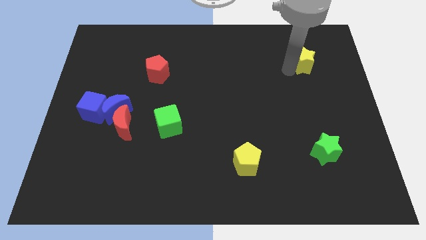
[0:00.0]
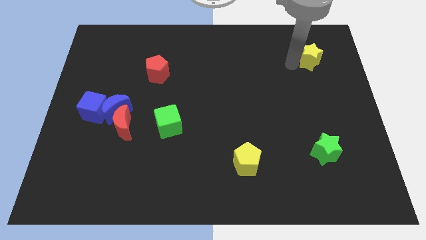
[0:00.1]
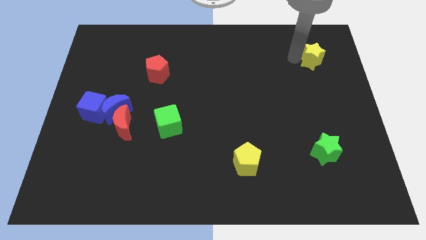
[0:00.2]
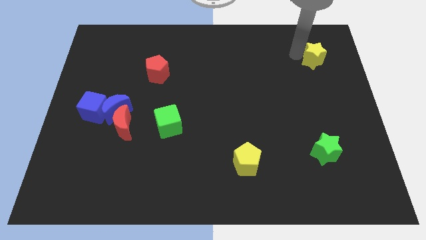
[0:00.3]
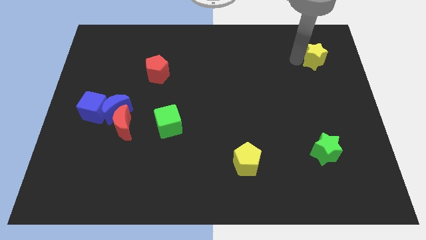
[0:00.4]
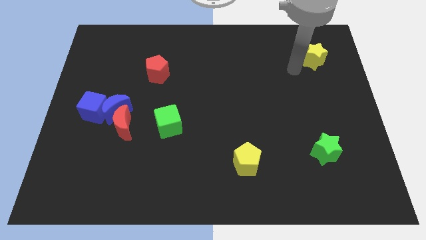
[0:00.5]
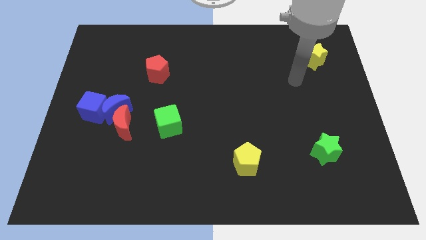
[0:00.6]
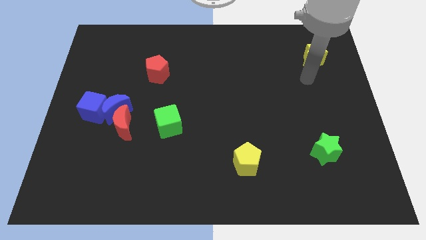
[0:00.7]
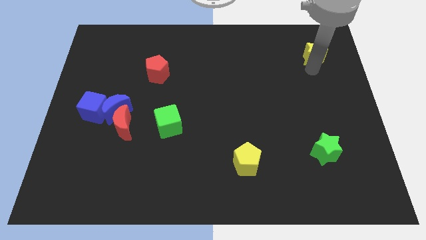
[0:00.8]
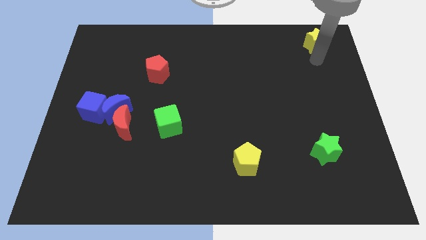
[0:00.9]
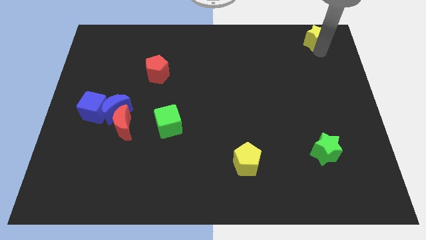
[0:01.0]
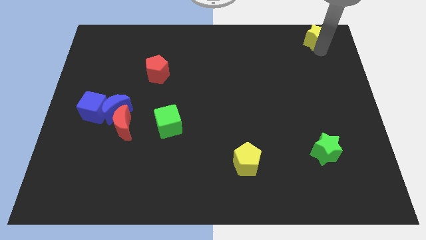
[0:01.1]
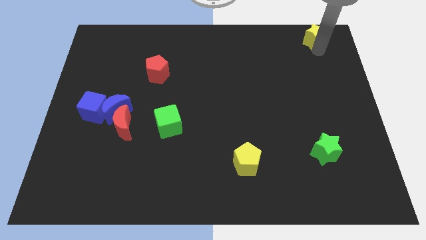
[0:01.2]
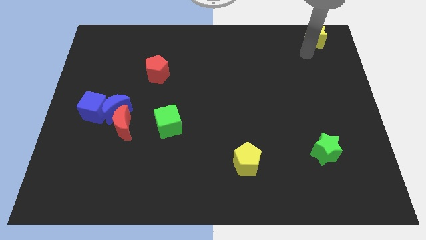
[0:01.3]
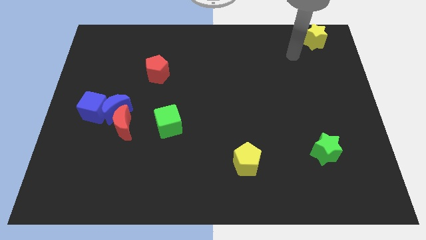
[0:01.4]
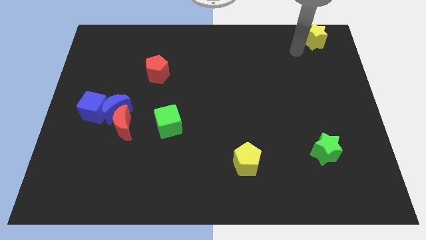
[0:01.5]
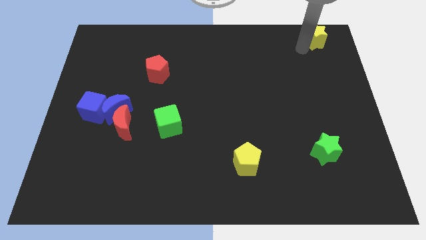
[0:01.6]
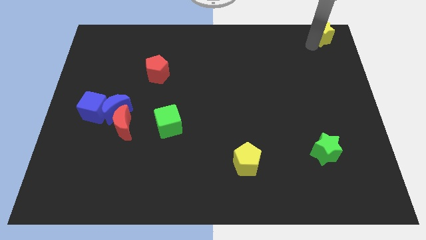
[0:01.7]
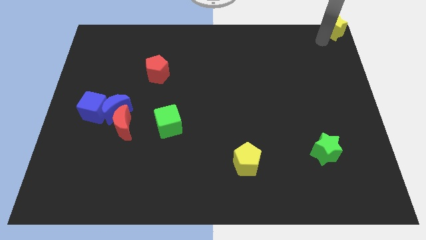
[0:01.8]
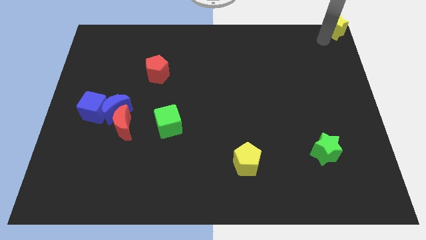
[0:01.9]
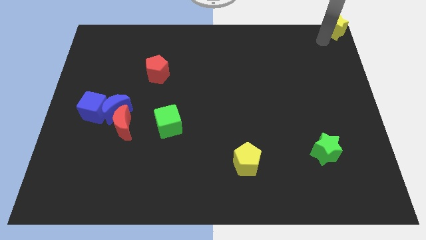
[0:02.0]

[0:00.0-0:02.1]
push the yellow star to the top right corner of the board

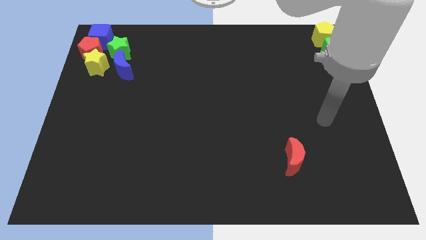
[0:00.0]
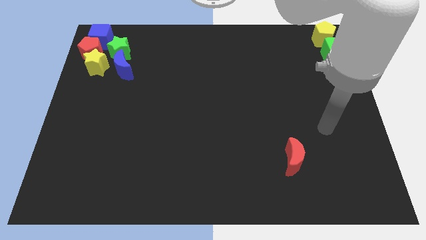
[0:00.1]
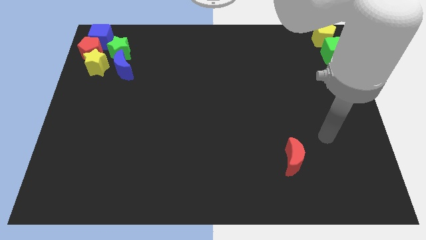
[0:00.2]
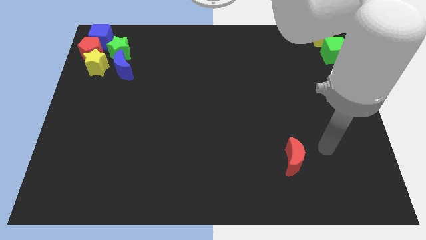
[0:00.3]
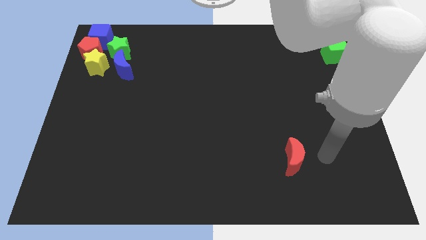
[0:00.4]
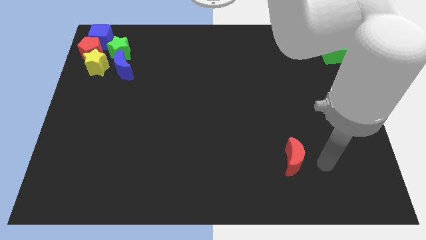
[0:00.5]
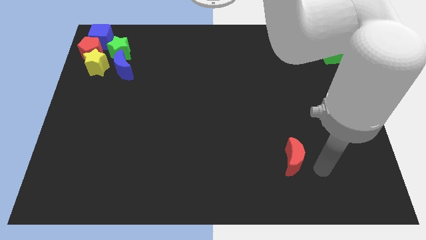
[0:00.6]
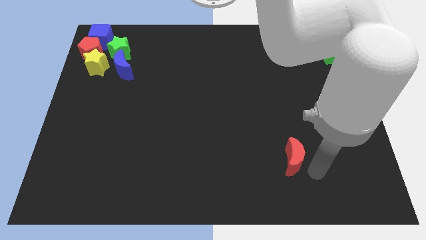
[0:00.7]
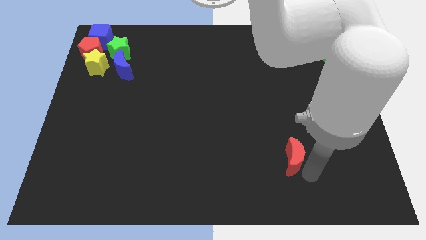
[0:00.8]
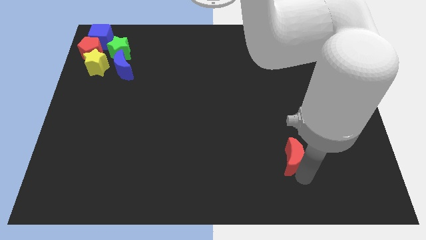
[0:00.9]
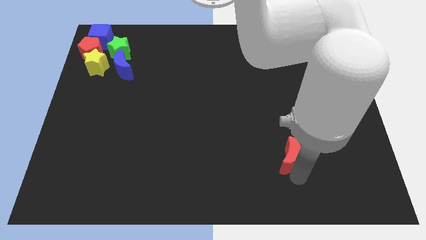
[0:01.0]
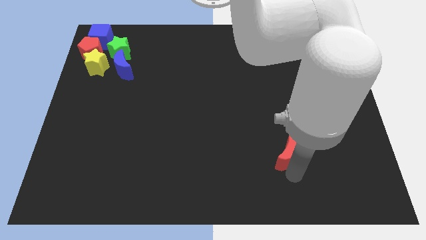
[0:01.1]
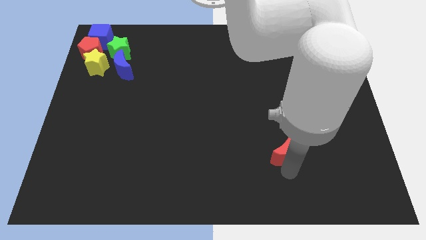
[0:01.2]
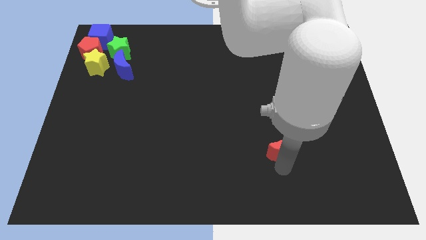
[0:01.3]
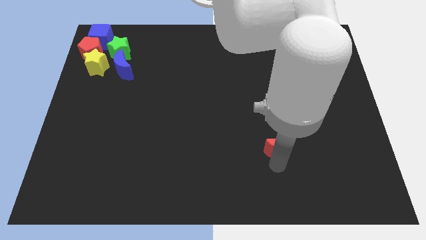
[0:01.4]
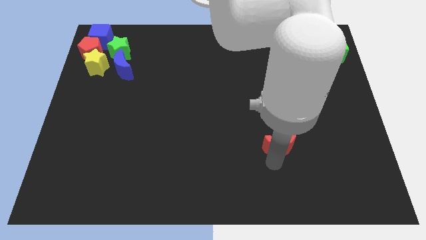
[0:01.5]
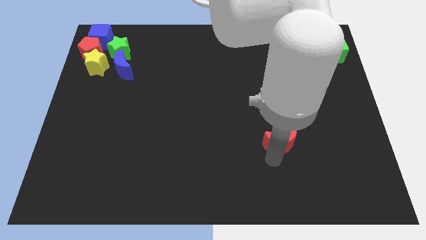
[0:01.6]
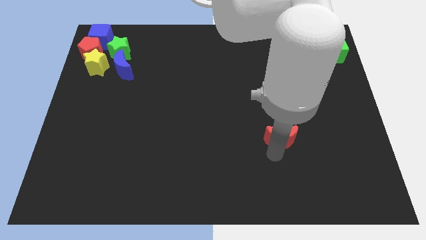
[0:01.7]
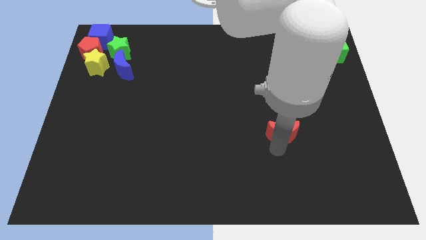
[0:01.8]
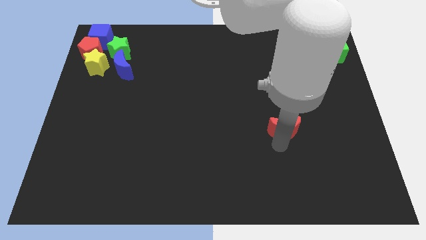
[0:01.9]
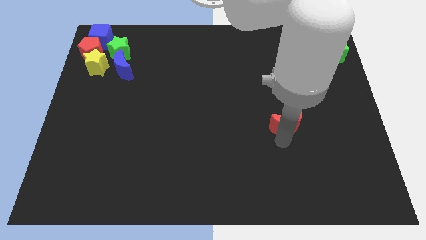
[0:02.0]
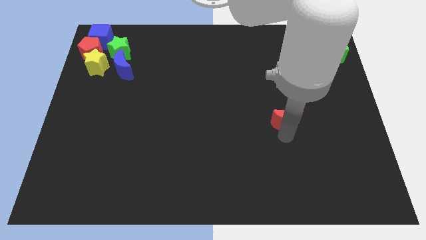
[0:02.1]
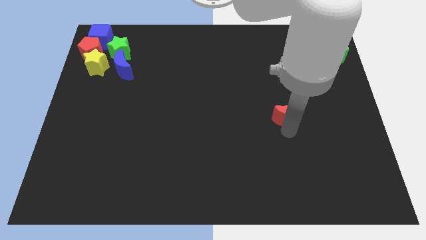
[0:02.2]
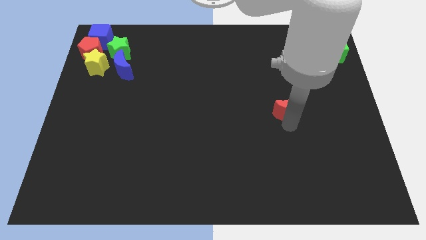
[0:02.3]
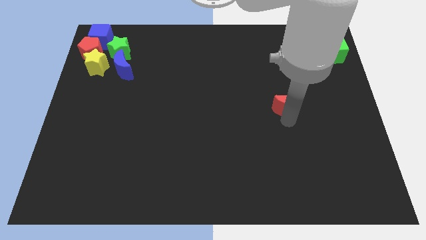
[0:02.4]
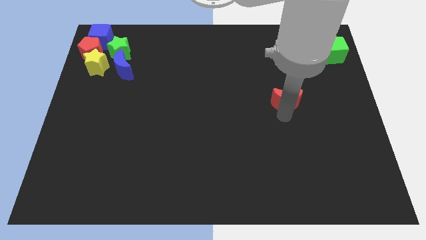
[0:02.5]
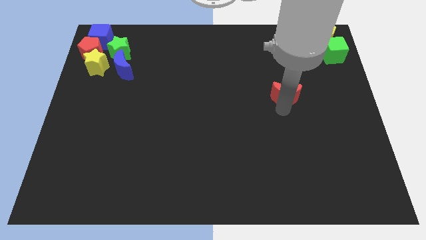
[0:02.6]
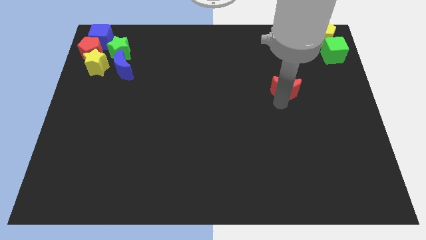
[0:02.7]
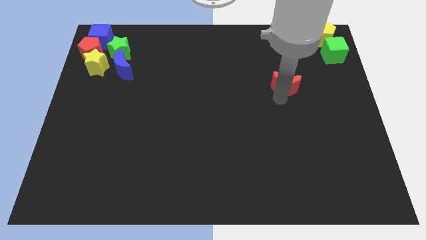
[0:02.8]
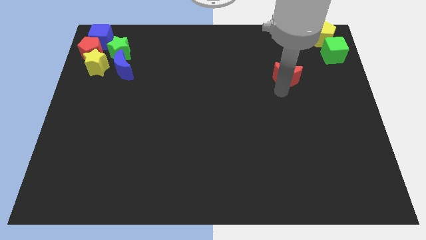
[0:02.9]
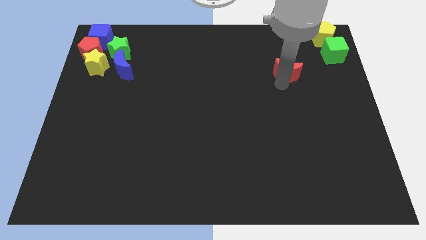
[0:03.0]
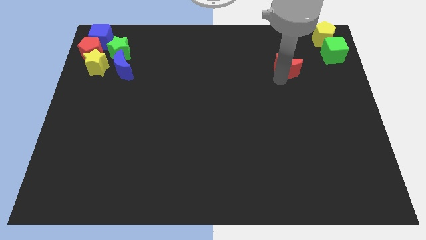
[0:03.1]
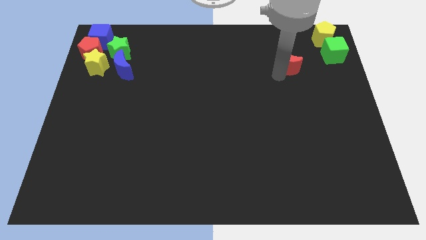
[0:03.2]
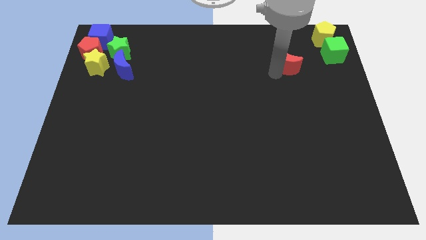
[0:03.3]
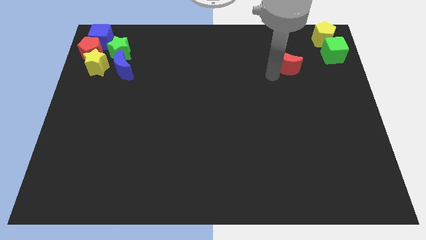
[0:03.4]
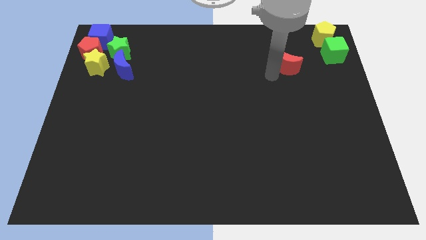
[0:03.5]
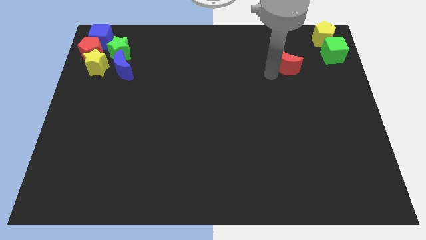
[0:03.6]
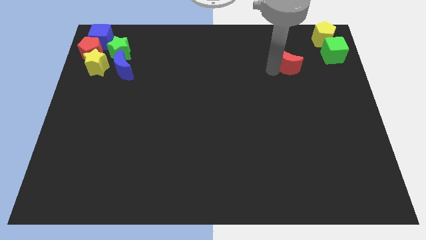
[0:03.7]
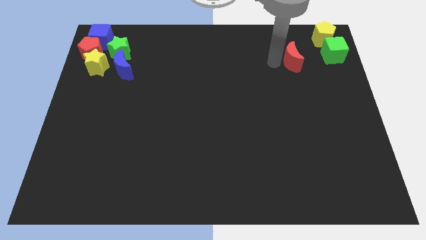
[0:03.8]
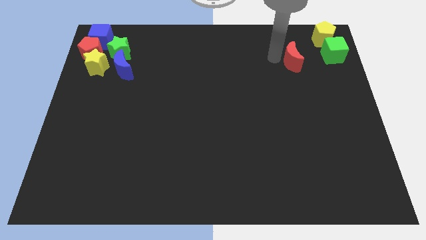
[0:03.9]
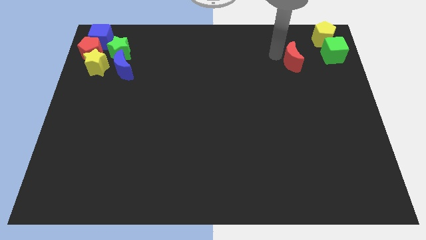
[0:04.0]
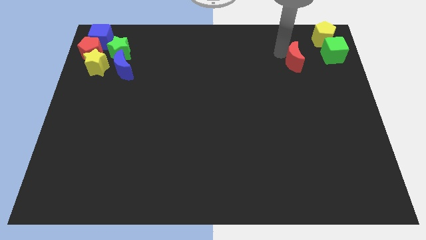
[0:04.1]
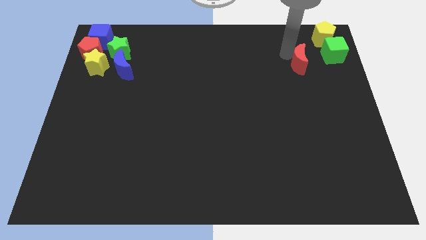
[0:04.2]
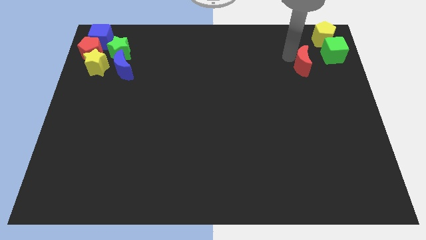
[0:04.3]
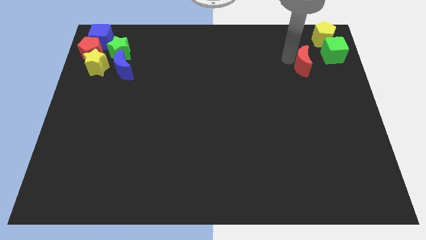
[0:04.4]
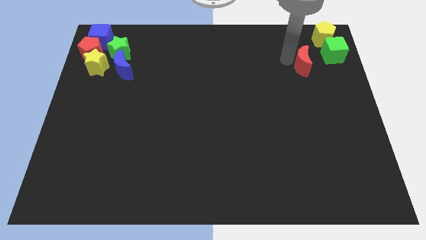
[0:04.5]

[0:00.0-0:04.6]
push the red moon parallel to the blue moon

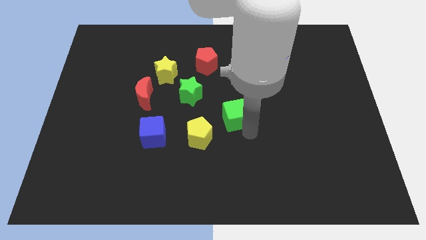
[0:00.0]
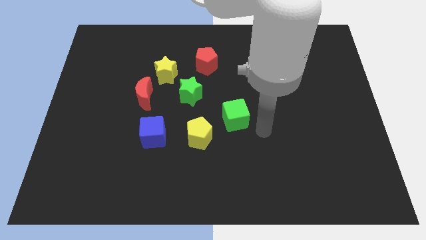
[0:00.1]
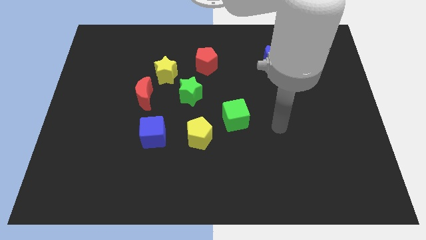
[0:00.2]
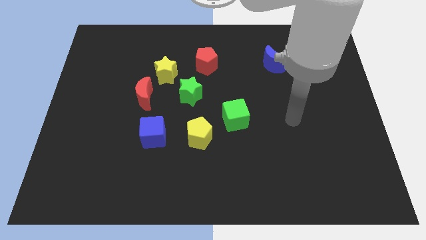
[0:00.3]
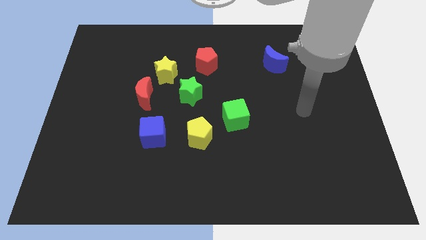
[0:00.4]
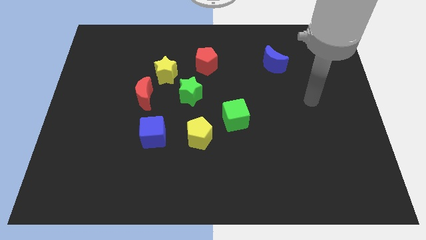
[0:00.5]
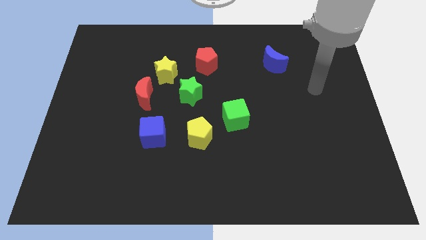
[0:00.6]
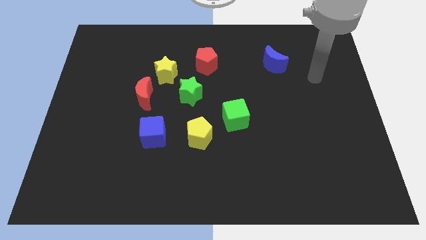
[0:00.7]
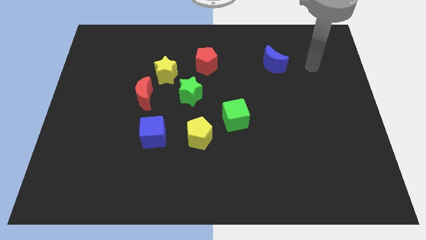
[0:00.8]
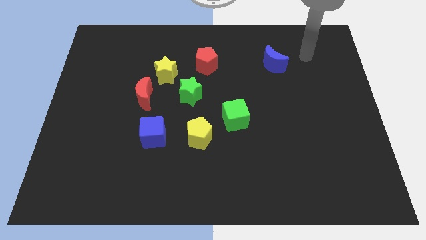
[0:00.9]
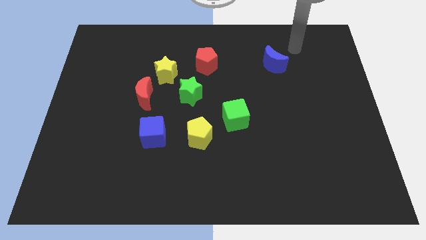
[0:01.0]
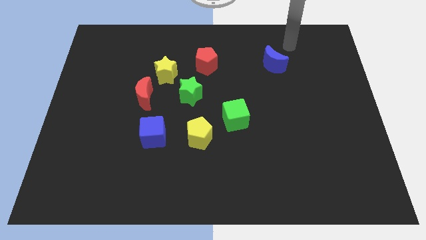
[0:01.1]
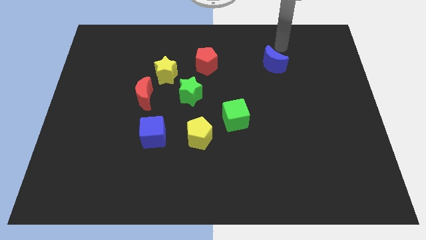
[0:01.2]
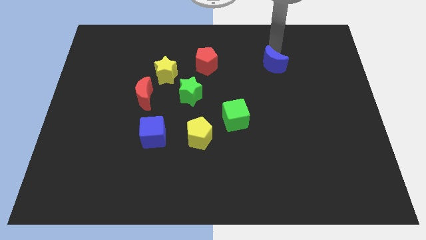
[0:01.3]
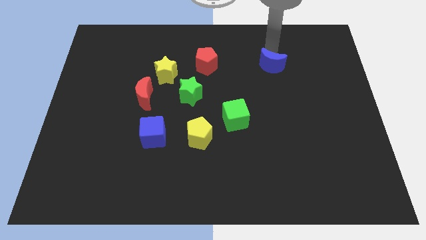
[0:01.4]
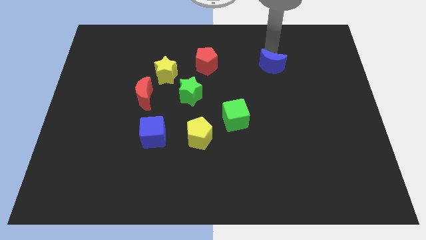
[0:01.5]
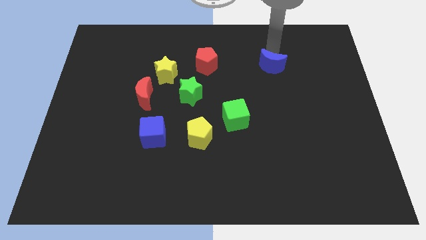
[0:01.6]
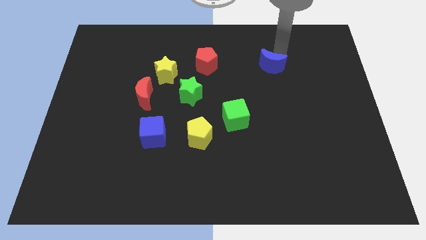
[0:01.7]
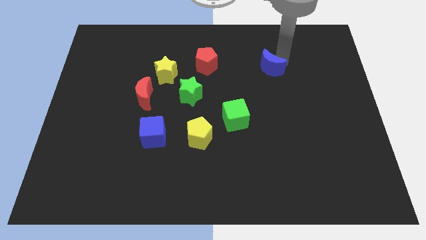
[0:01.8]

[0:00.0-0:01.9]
slightly push the blue crescent

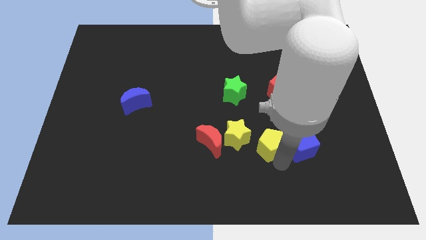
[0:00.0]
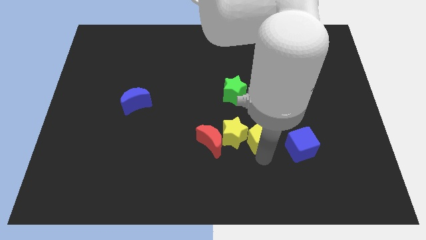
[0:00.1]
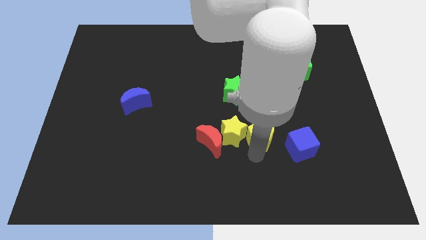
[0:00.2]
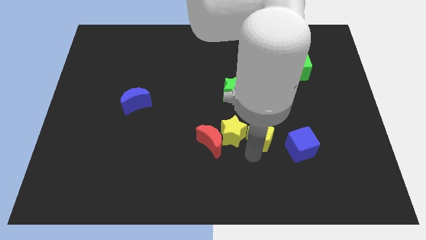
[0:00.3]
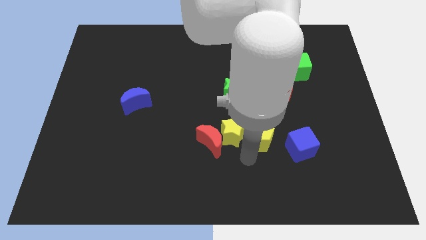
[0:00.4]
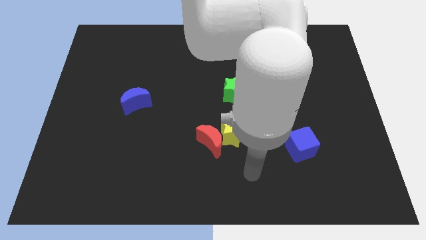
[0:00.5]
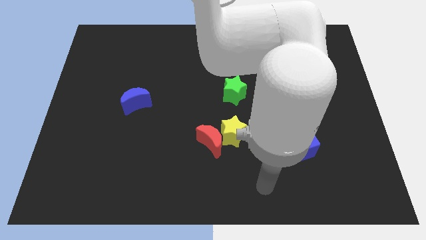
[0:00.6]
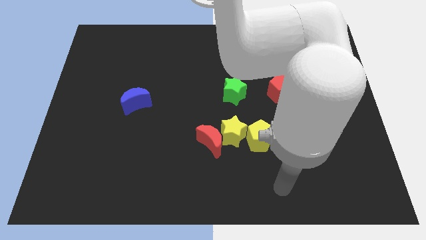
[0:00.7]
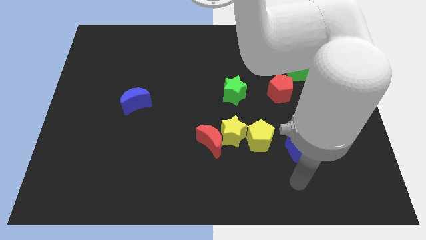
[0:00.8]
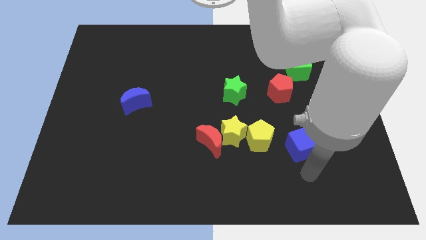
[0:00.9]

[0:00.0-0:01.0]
push the yellow pentagon into the yellow star
